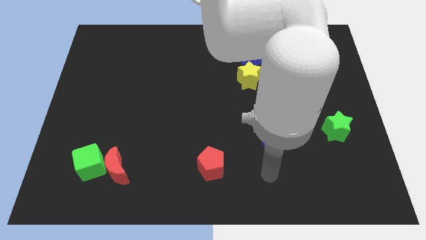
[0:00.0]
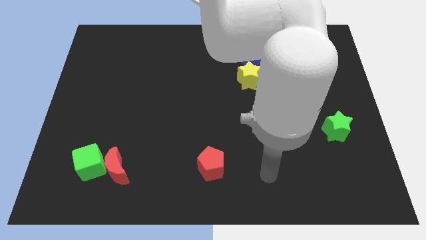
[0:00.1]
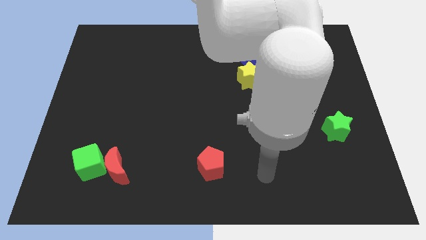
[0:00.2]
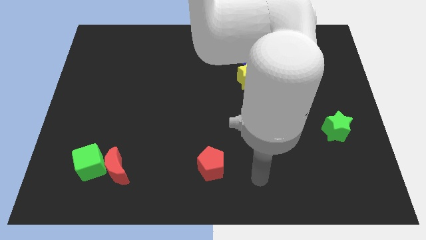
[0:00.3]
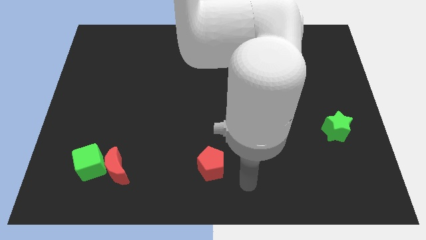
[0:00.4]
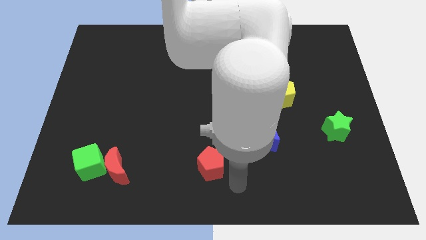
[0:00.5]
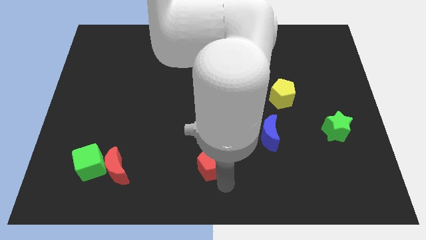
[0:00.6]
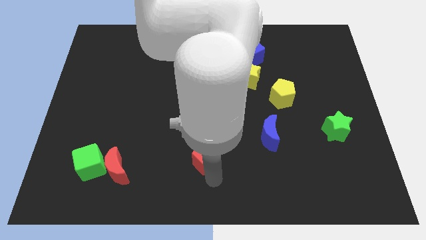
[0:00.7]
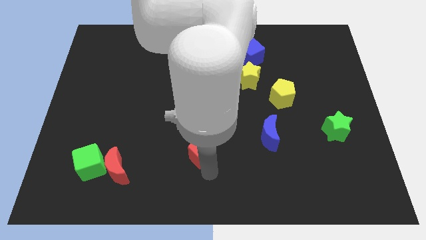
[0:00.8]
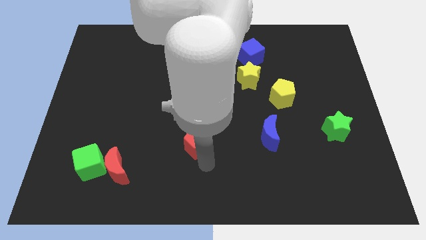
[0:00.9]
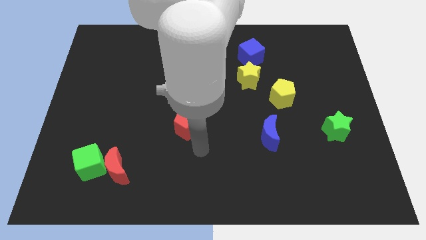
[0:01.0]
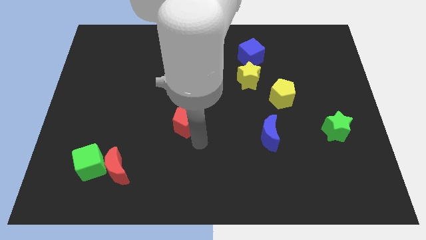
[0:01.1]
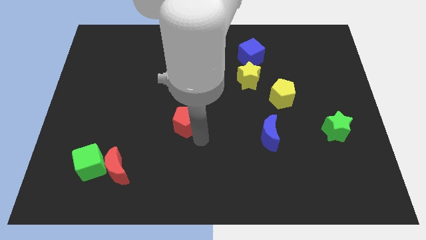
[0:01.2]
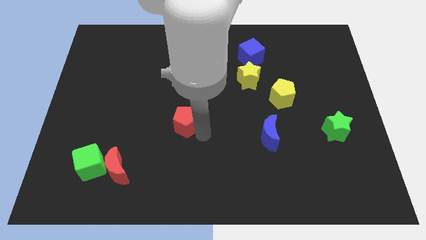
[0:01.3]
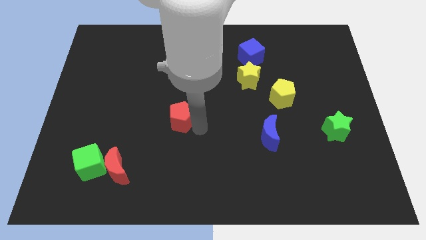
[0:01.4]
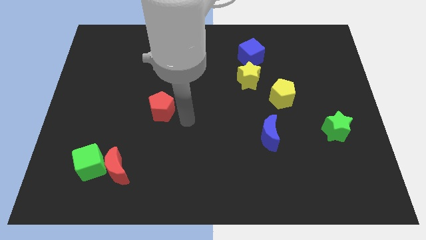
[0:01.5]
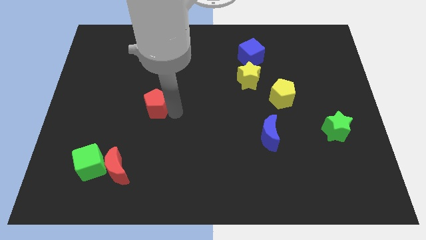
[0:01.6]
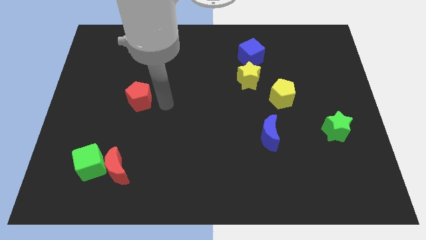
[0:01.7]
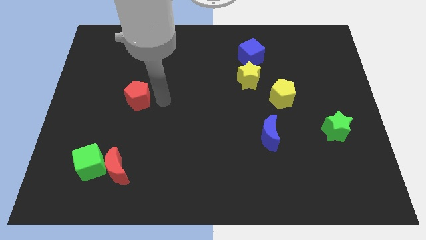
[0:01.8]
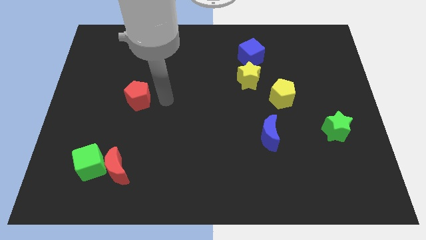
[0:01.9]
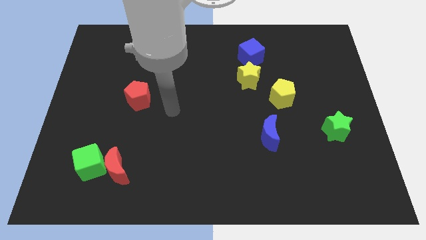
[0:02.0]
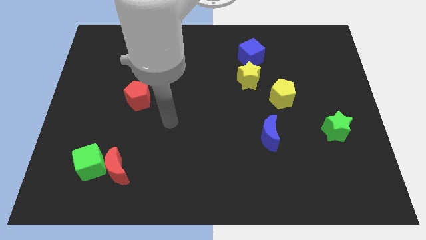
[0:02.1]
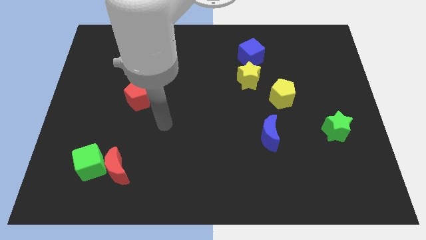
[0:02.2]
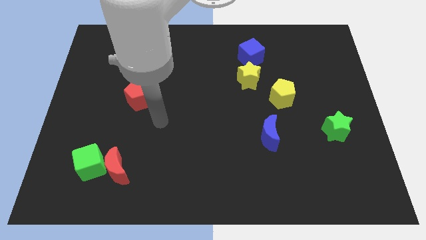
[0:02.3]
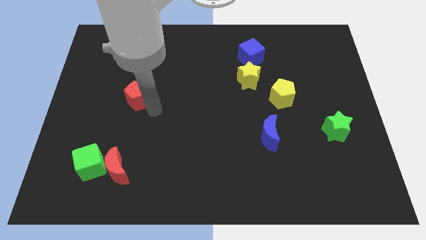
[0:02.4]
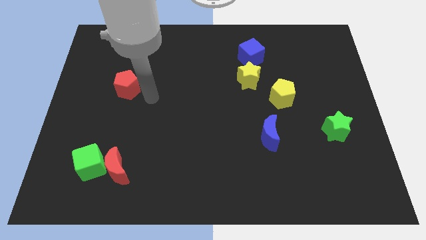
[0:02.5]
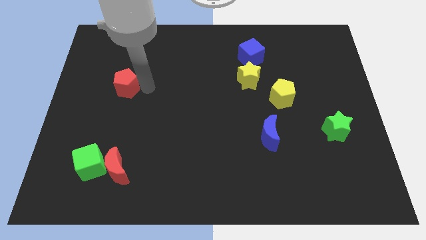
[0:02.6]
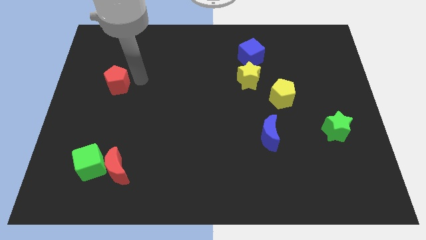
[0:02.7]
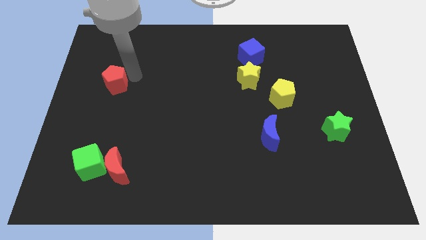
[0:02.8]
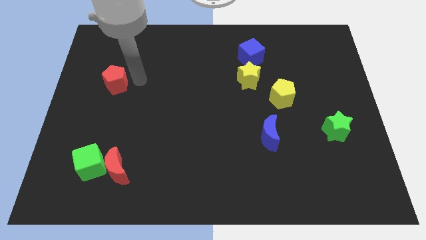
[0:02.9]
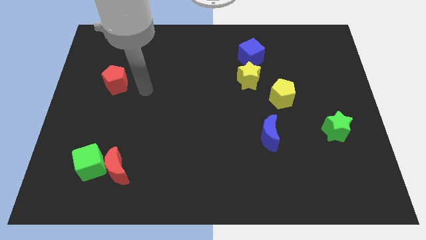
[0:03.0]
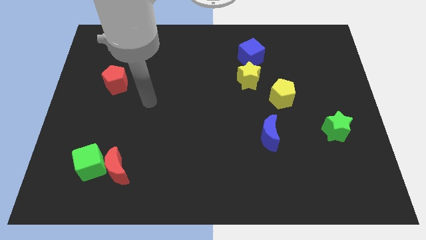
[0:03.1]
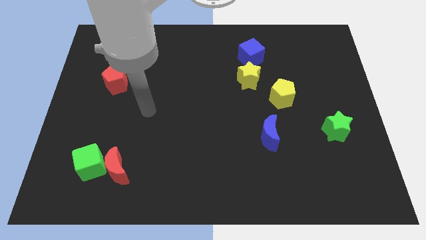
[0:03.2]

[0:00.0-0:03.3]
push the red pentagon to the horizontal left side of the yellow star

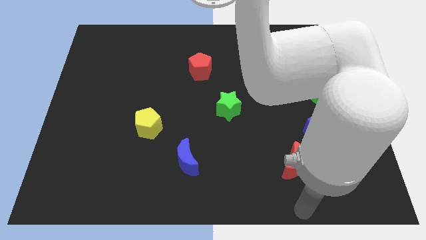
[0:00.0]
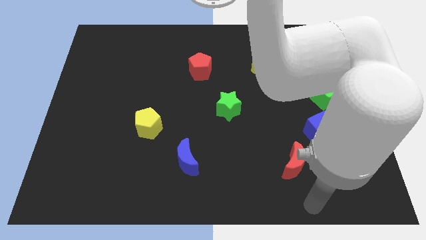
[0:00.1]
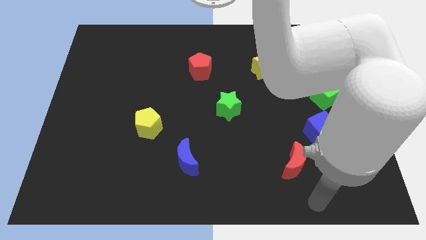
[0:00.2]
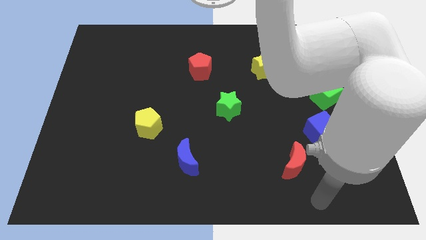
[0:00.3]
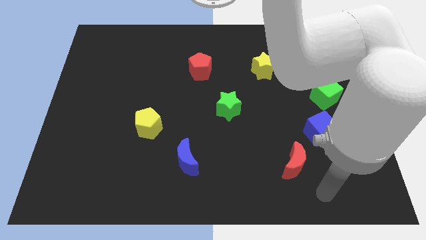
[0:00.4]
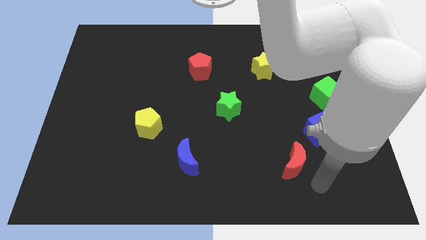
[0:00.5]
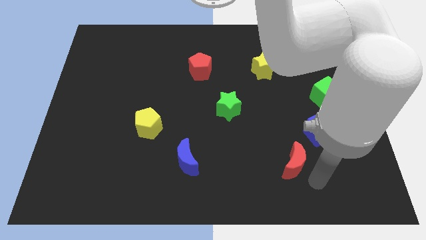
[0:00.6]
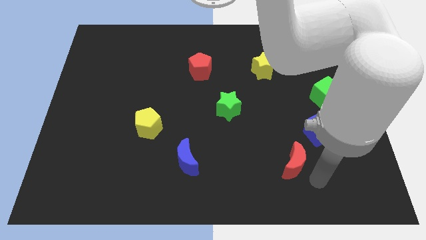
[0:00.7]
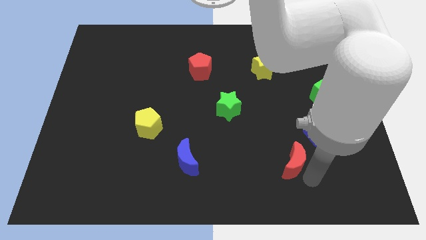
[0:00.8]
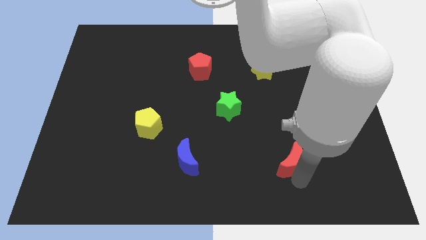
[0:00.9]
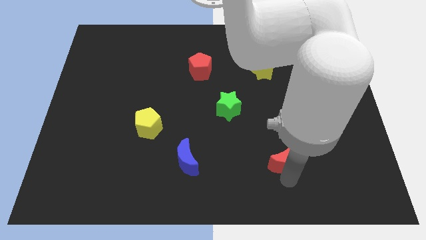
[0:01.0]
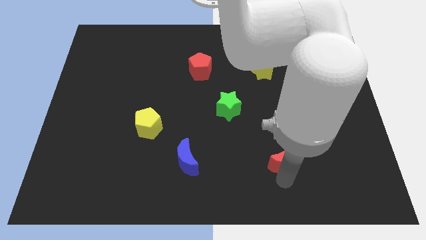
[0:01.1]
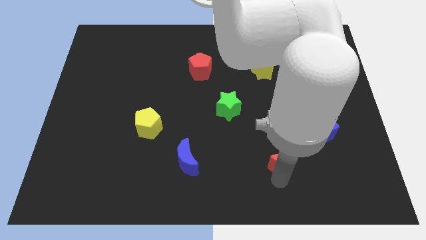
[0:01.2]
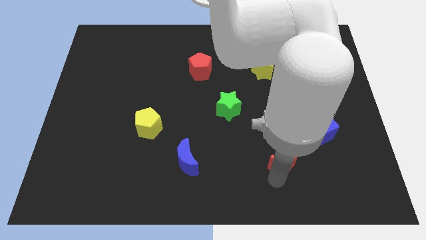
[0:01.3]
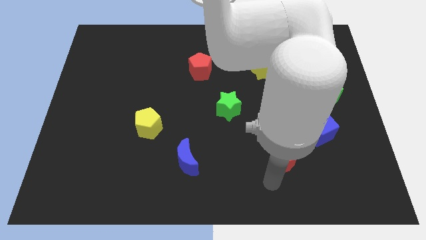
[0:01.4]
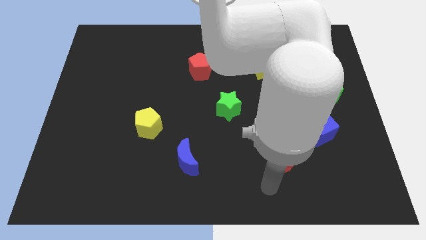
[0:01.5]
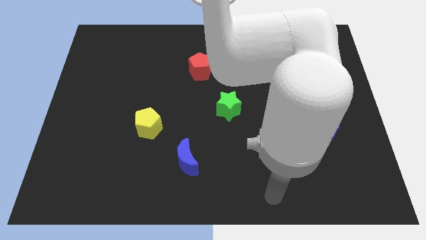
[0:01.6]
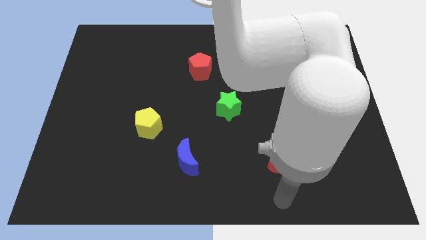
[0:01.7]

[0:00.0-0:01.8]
tap the right side of the red crescent

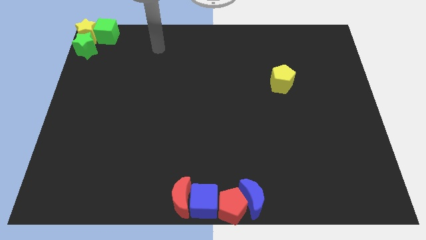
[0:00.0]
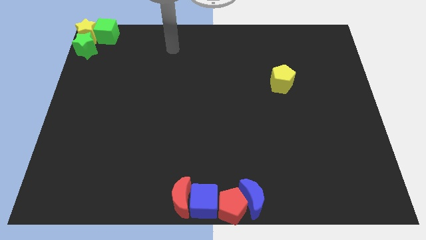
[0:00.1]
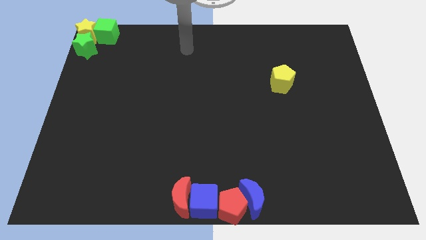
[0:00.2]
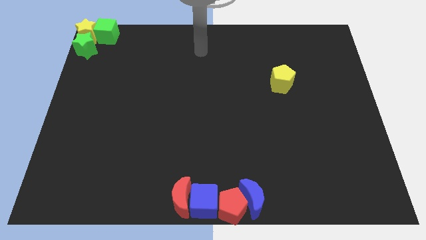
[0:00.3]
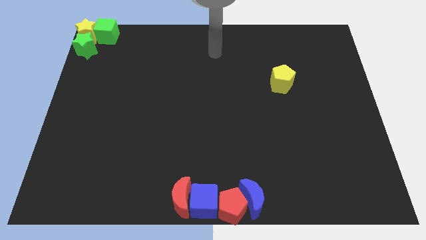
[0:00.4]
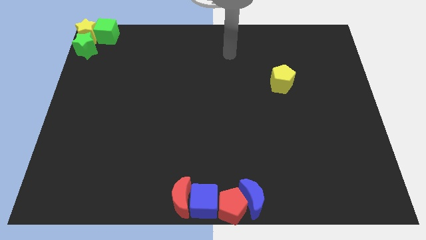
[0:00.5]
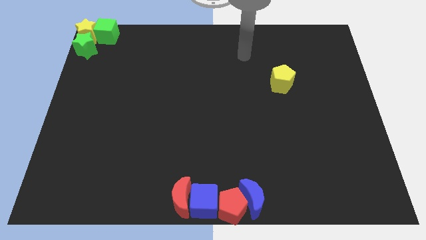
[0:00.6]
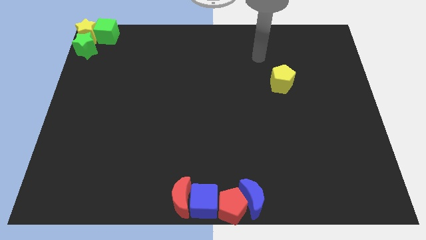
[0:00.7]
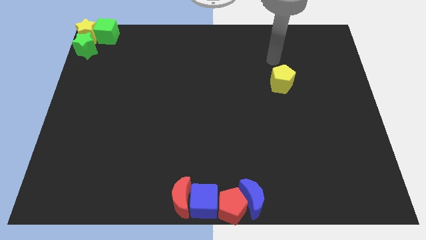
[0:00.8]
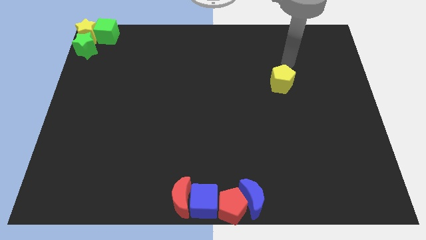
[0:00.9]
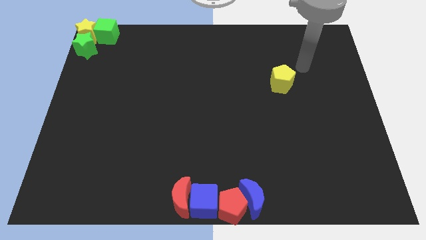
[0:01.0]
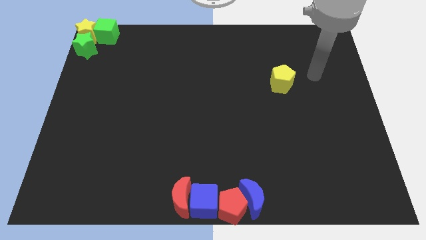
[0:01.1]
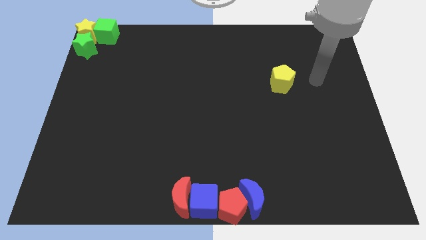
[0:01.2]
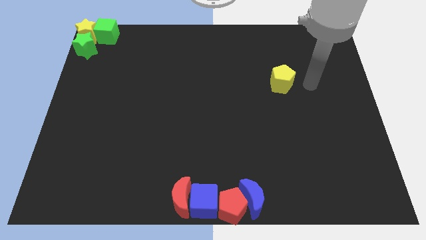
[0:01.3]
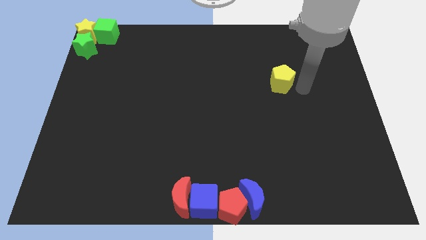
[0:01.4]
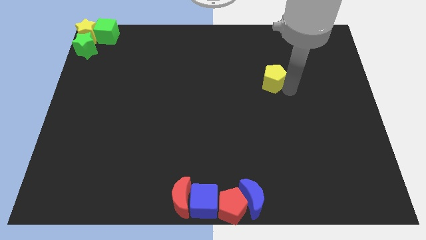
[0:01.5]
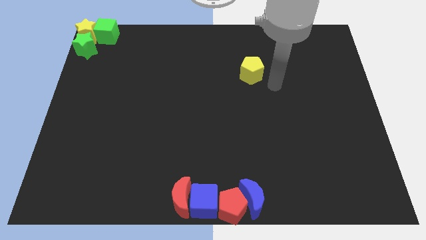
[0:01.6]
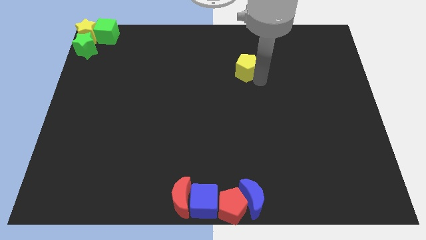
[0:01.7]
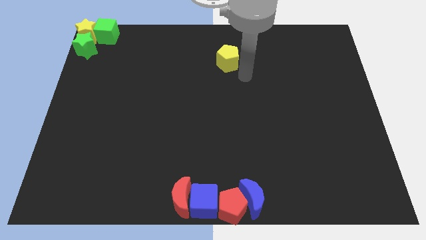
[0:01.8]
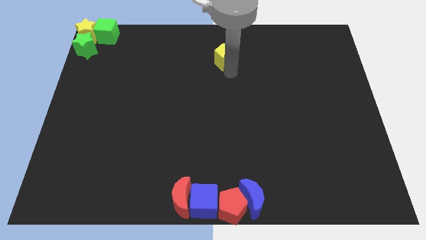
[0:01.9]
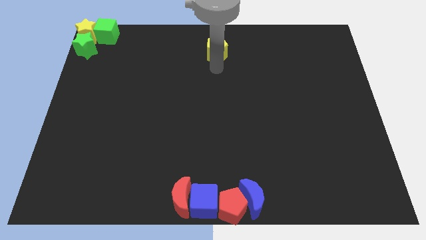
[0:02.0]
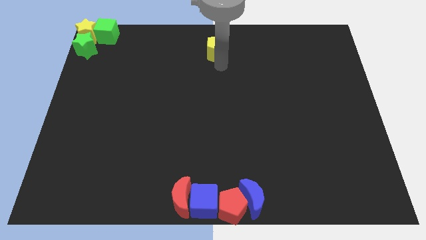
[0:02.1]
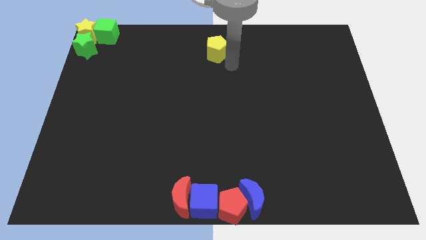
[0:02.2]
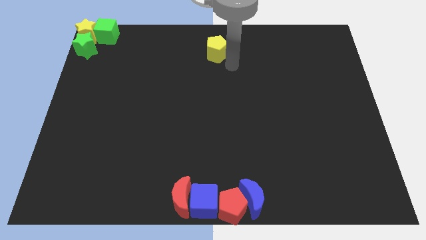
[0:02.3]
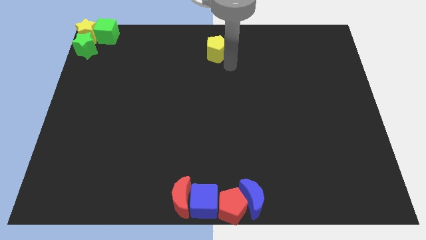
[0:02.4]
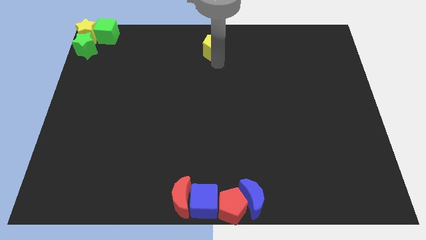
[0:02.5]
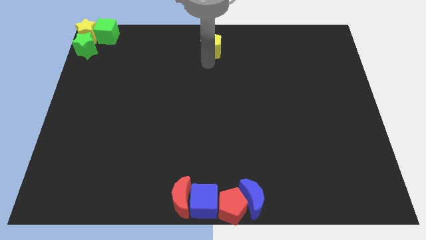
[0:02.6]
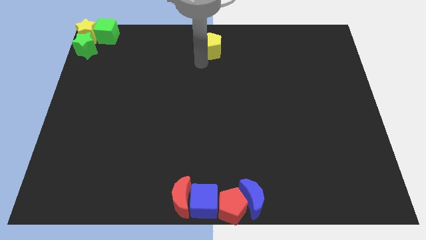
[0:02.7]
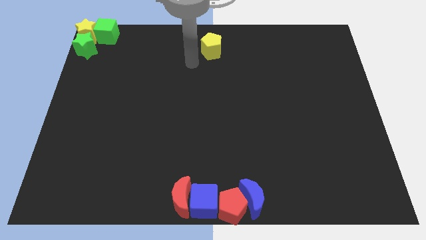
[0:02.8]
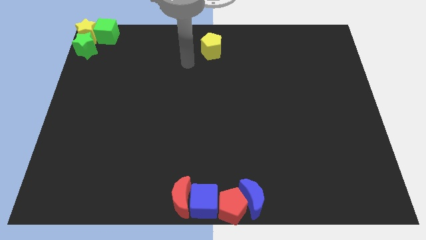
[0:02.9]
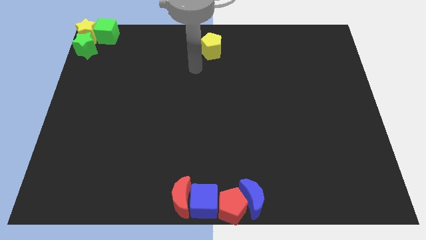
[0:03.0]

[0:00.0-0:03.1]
push yellow pentagon towards top center

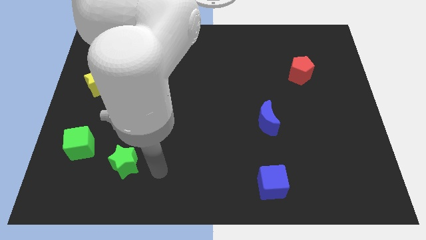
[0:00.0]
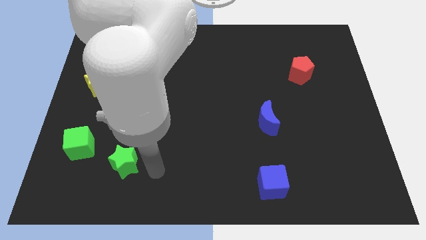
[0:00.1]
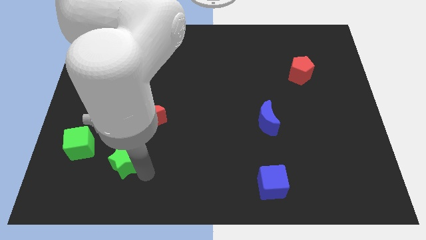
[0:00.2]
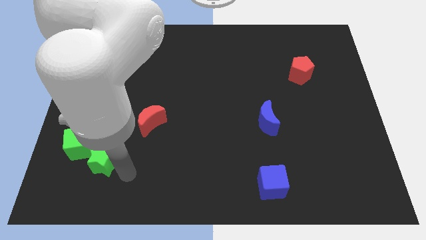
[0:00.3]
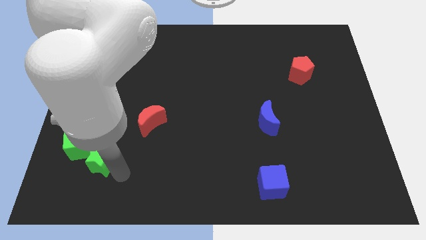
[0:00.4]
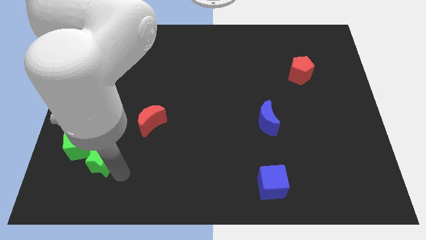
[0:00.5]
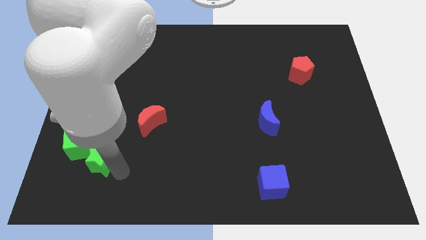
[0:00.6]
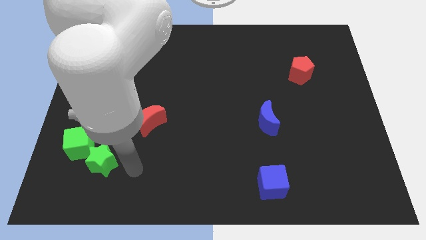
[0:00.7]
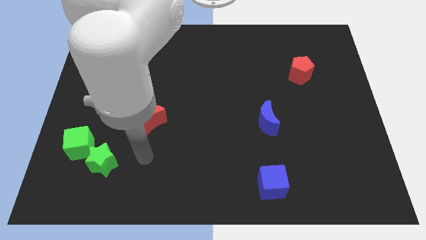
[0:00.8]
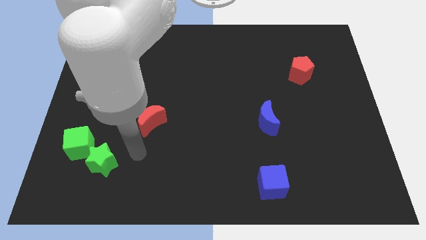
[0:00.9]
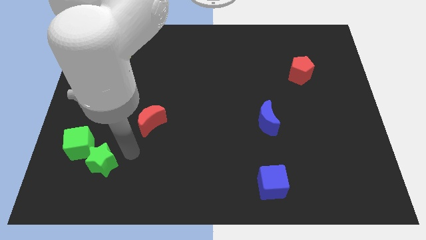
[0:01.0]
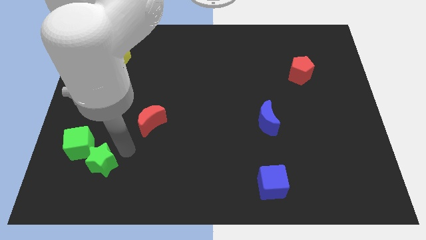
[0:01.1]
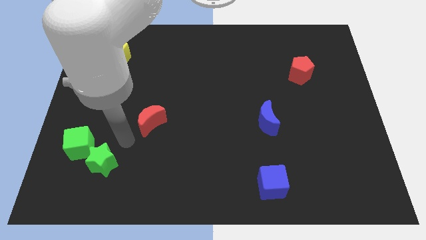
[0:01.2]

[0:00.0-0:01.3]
move the green star diagonally right to the green cube
